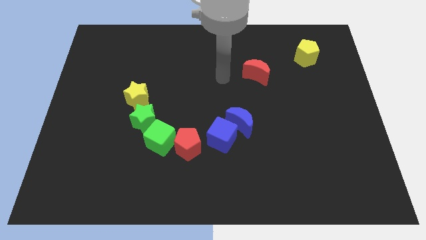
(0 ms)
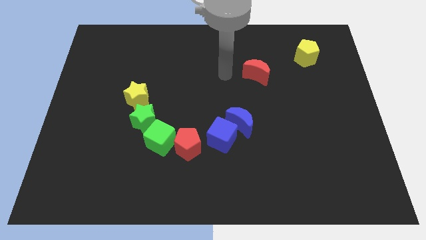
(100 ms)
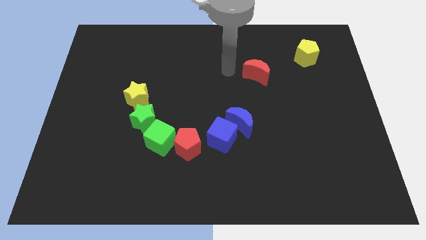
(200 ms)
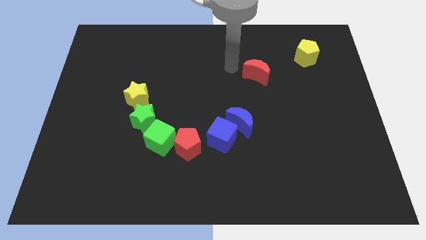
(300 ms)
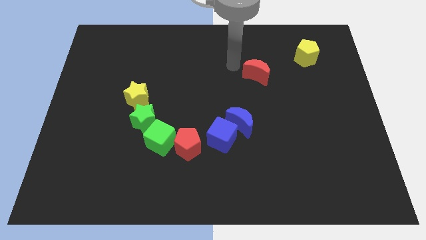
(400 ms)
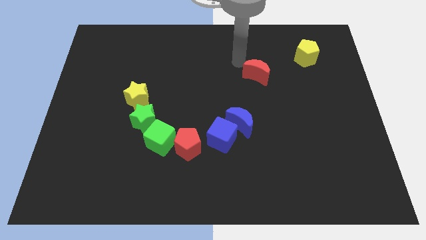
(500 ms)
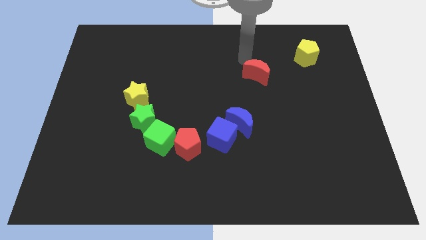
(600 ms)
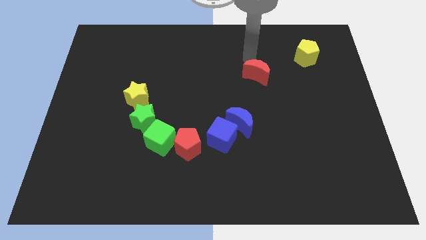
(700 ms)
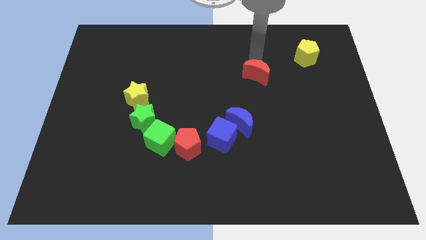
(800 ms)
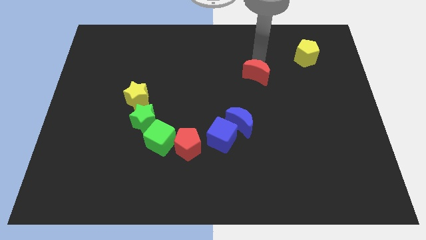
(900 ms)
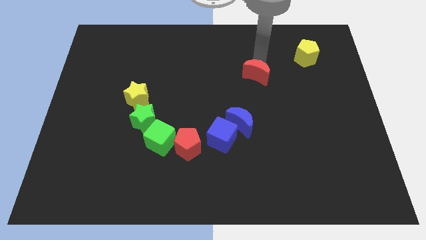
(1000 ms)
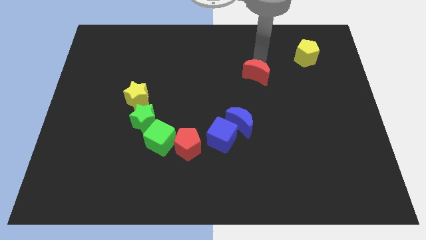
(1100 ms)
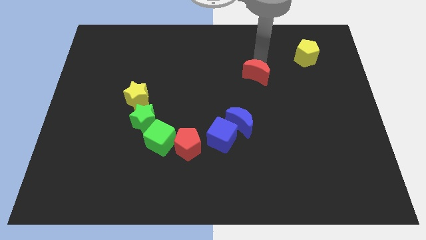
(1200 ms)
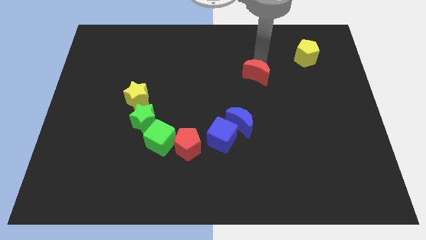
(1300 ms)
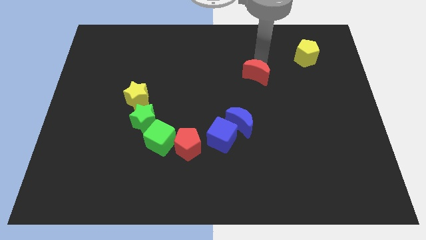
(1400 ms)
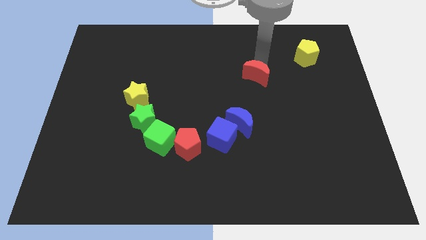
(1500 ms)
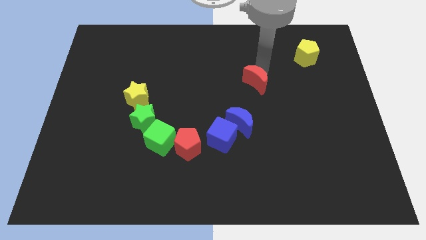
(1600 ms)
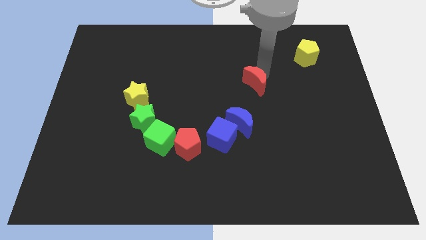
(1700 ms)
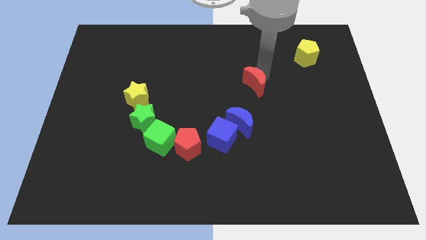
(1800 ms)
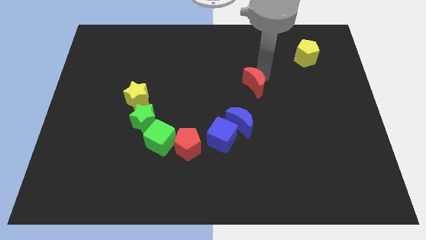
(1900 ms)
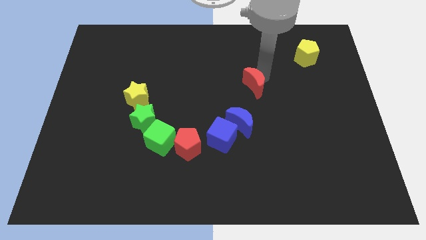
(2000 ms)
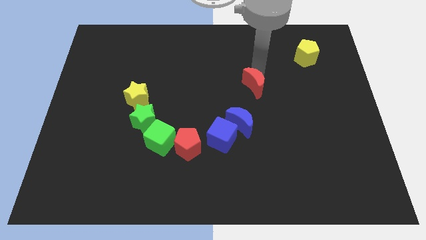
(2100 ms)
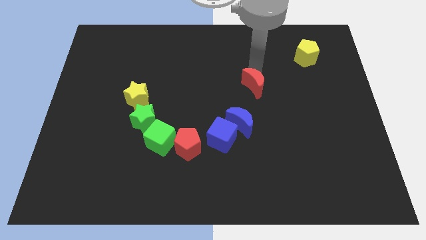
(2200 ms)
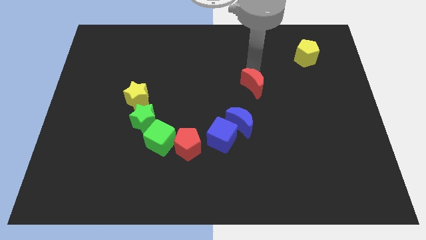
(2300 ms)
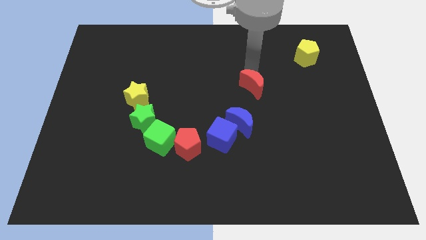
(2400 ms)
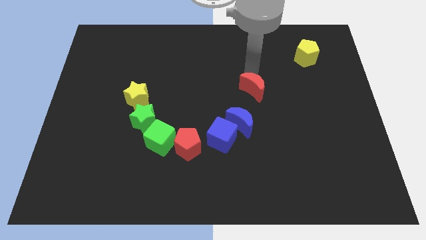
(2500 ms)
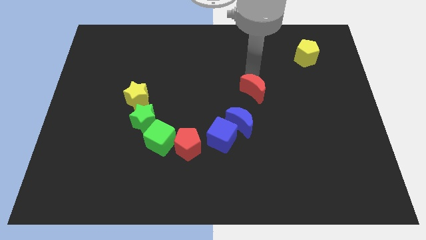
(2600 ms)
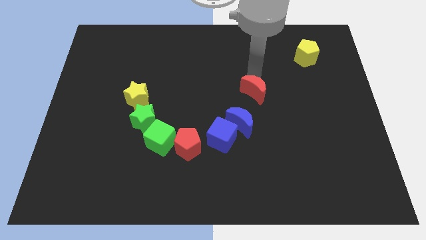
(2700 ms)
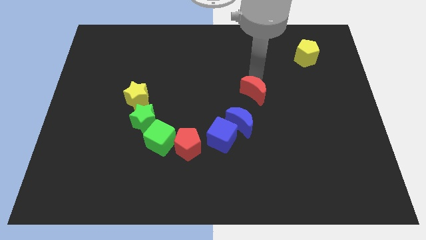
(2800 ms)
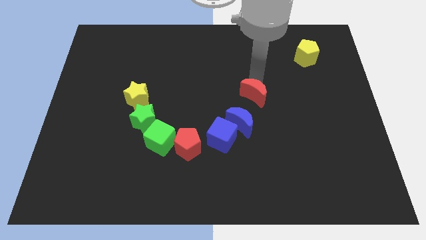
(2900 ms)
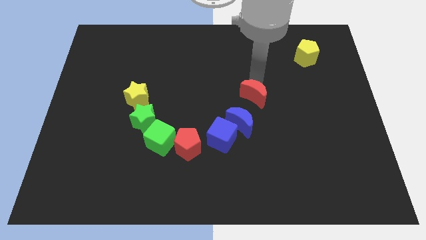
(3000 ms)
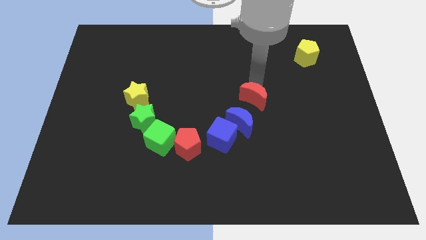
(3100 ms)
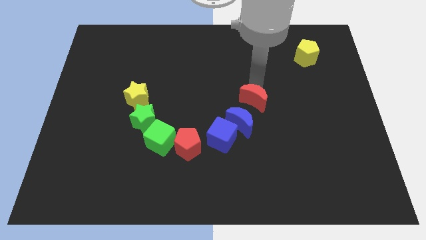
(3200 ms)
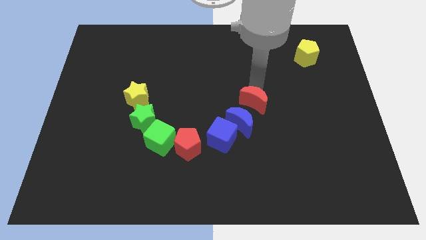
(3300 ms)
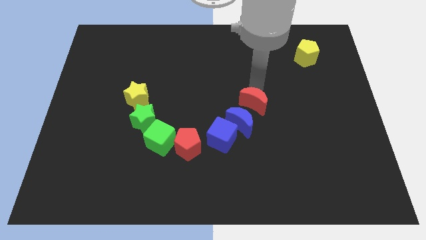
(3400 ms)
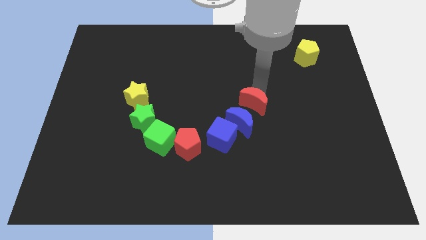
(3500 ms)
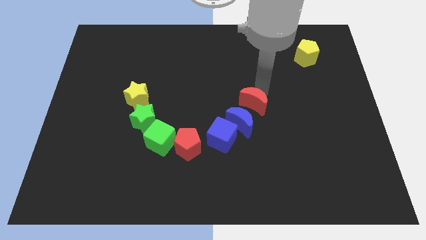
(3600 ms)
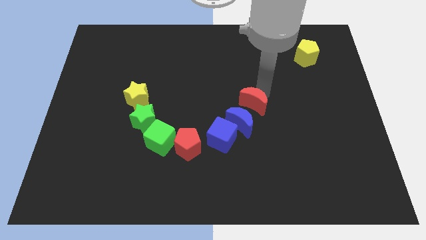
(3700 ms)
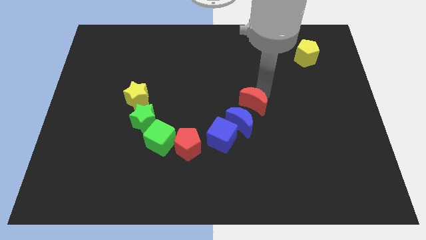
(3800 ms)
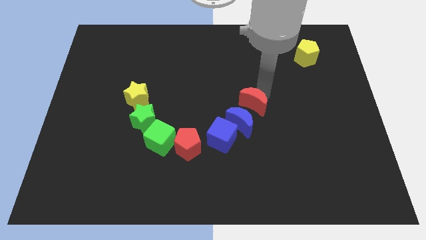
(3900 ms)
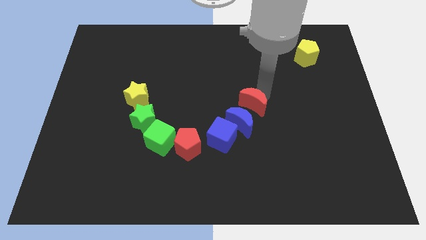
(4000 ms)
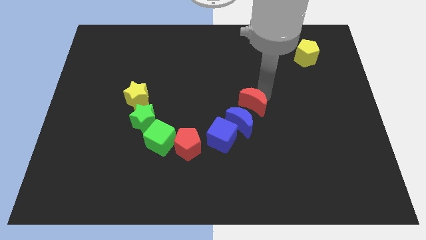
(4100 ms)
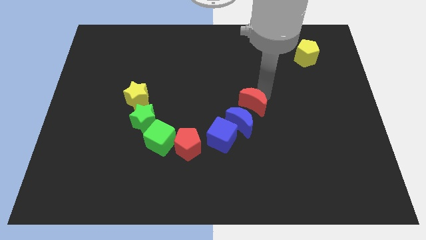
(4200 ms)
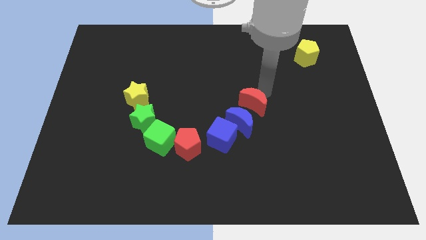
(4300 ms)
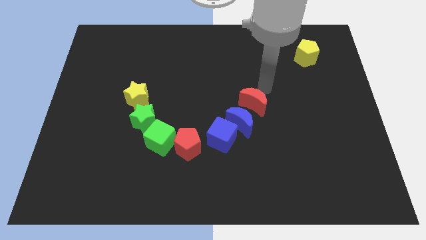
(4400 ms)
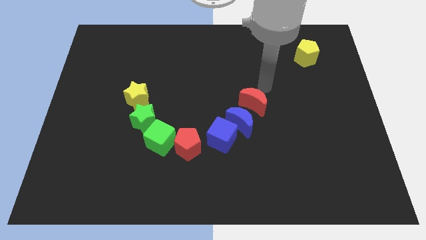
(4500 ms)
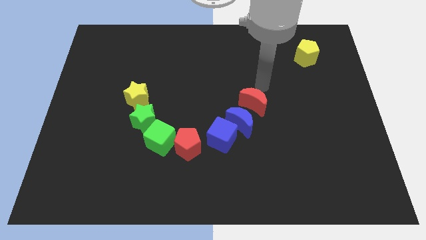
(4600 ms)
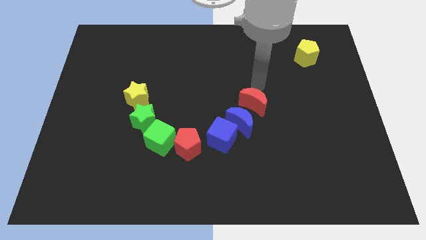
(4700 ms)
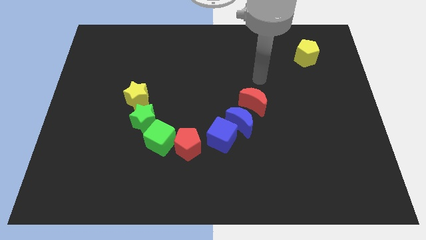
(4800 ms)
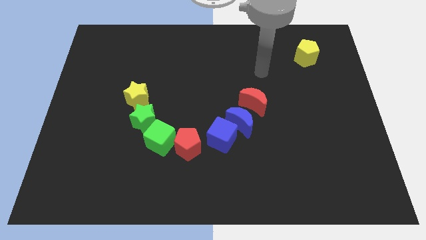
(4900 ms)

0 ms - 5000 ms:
move the red crescent towards the blue moon

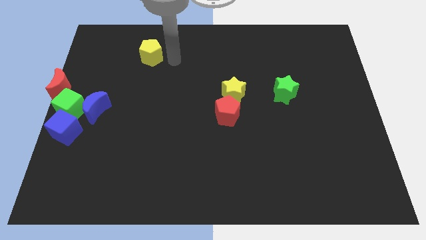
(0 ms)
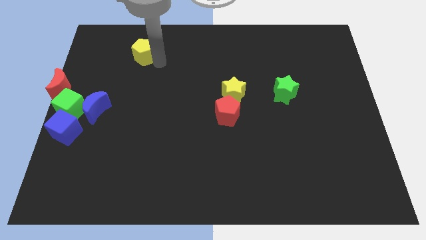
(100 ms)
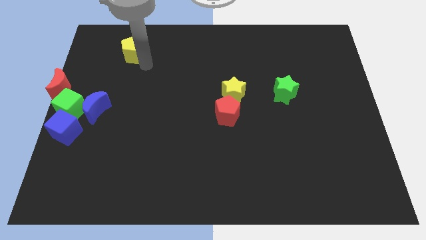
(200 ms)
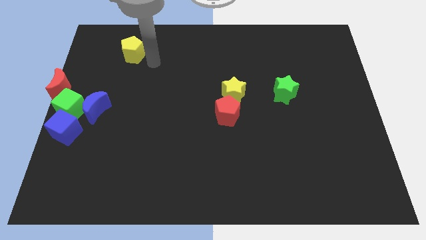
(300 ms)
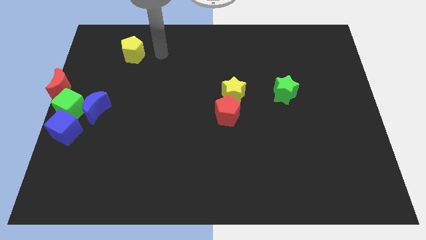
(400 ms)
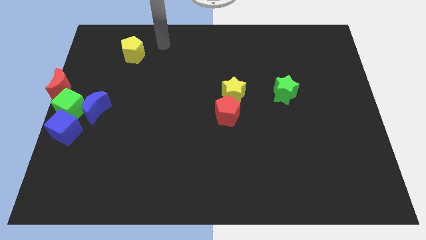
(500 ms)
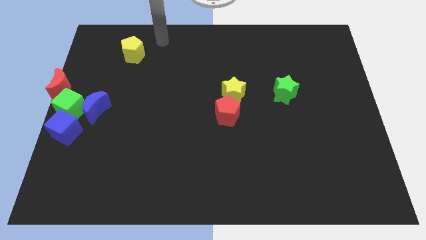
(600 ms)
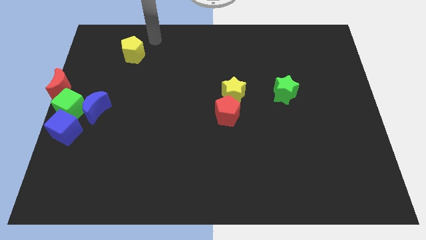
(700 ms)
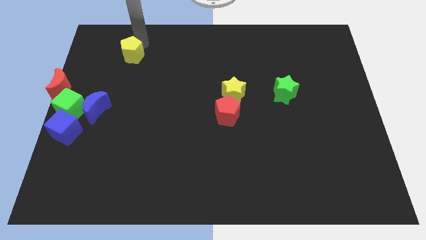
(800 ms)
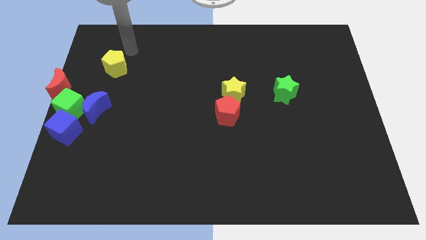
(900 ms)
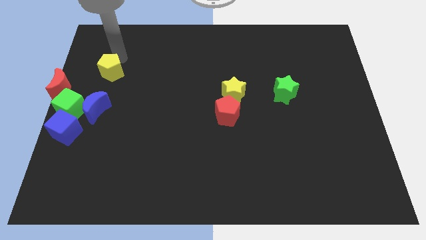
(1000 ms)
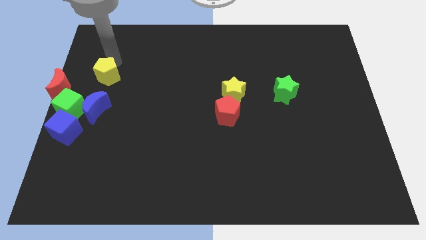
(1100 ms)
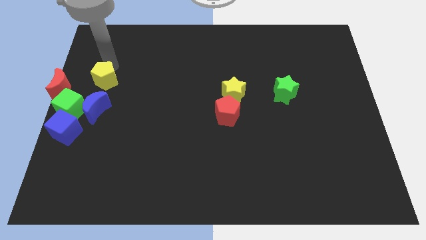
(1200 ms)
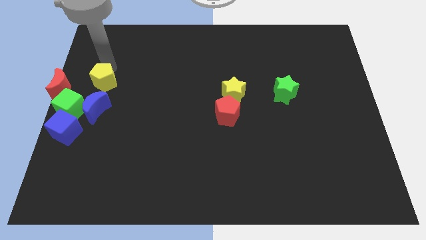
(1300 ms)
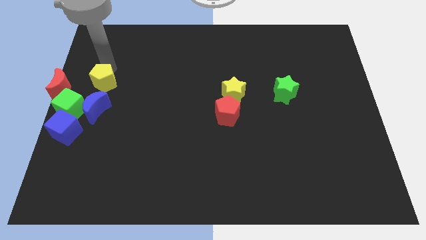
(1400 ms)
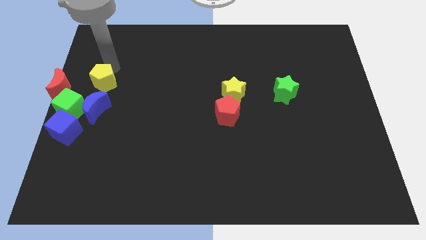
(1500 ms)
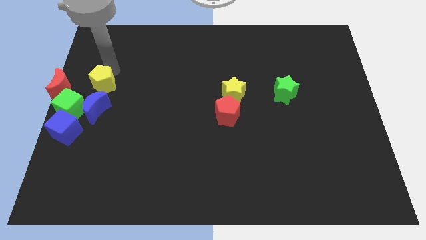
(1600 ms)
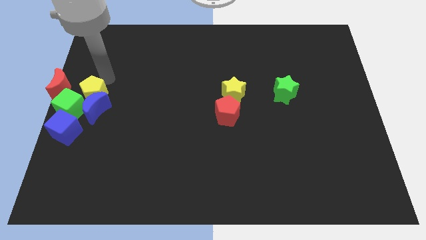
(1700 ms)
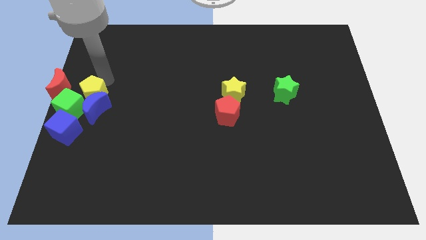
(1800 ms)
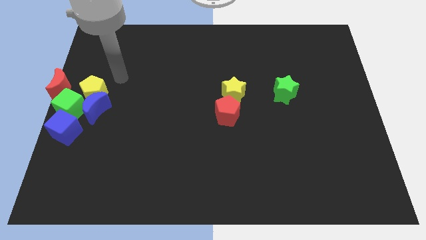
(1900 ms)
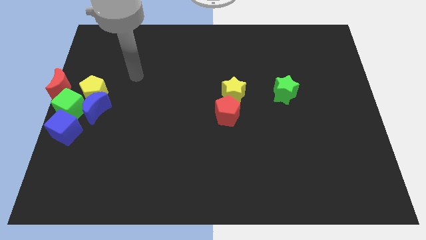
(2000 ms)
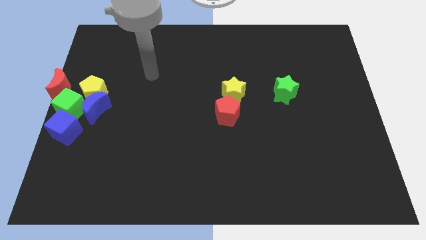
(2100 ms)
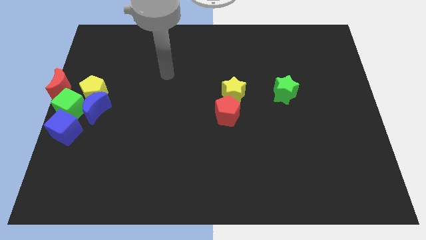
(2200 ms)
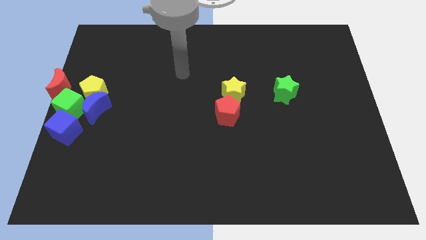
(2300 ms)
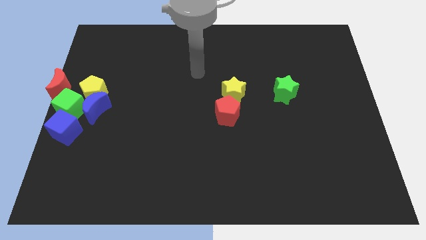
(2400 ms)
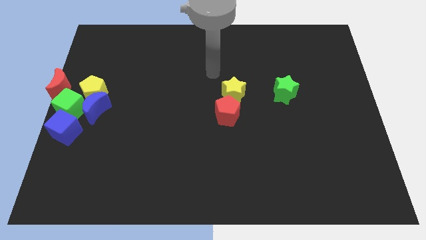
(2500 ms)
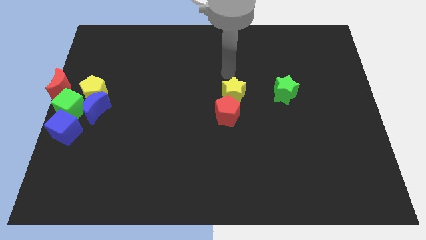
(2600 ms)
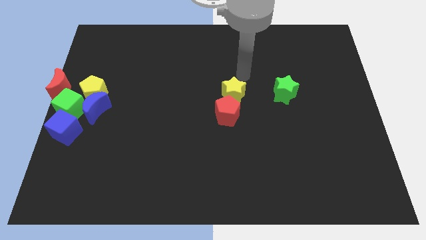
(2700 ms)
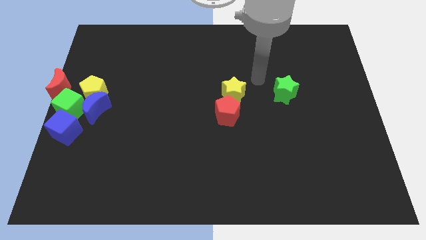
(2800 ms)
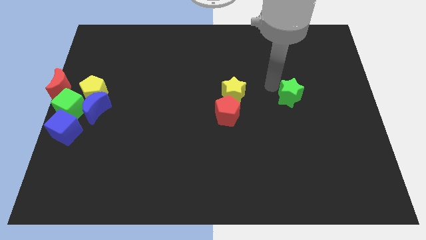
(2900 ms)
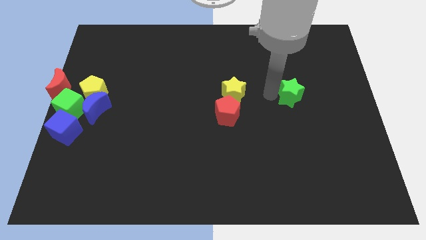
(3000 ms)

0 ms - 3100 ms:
move your arm left to the green star

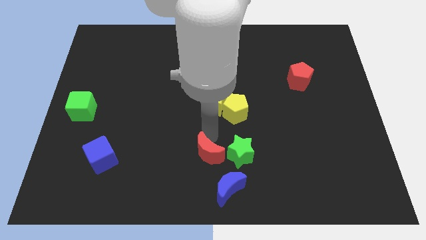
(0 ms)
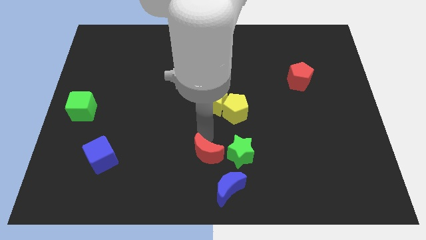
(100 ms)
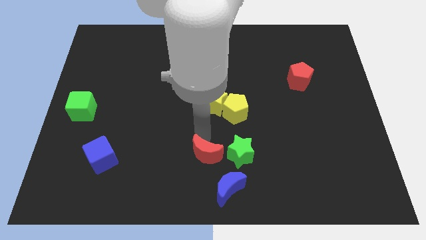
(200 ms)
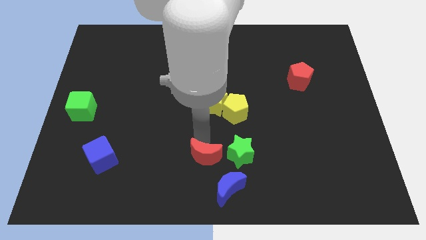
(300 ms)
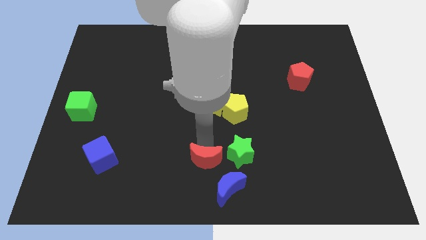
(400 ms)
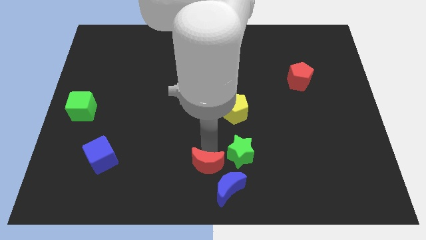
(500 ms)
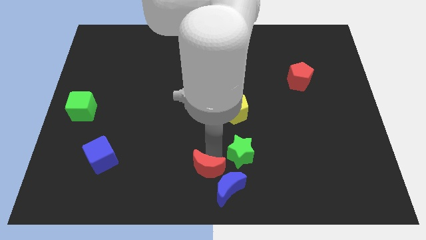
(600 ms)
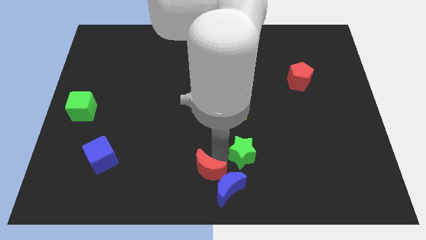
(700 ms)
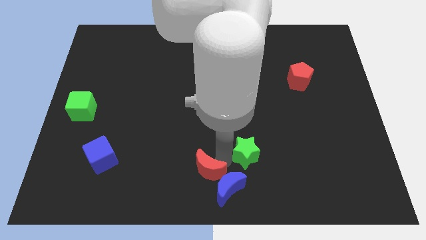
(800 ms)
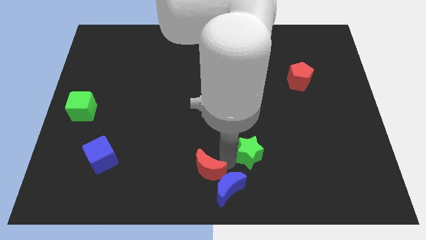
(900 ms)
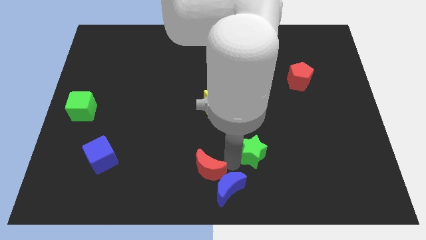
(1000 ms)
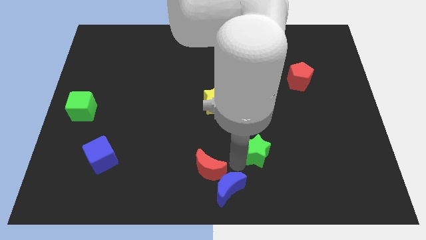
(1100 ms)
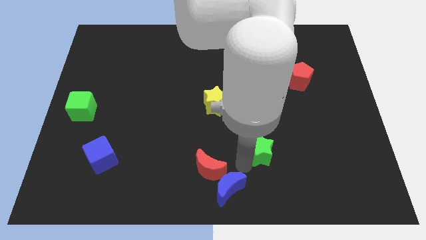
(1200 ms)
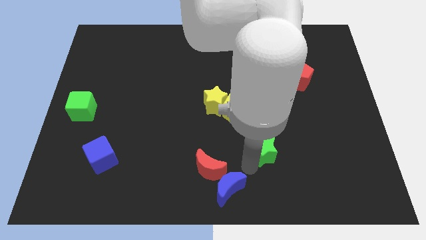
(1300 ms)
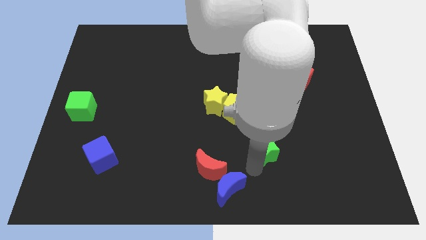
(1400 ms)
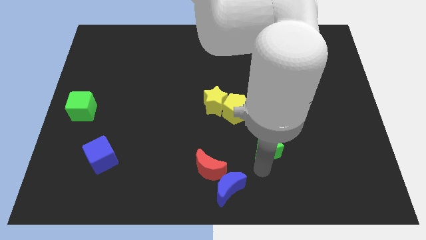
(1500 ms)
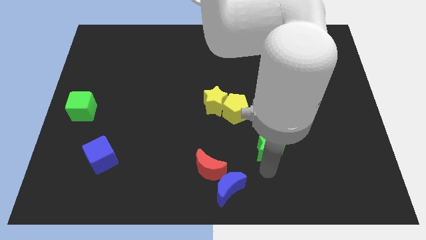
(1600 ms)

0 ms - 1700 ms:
separate the green star from the red crescent
